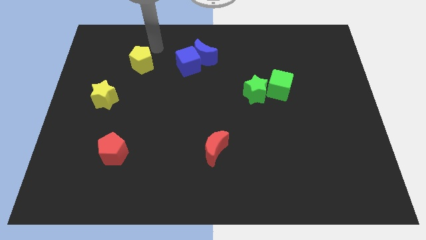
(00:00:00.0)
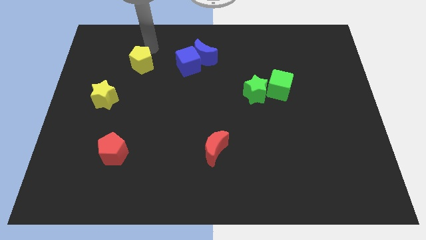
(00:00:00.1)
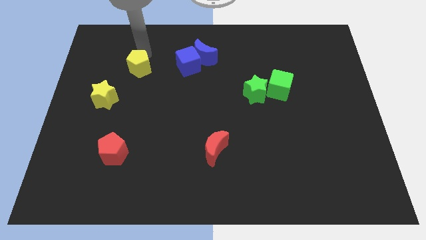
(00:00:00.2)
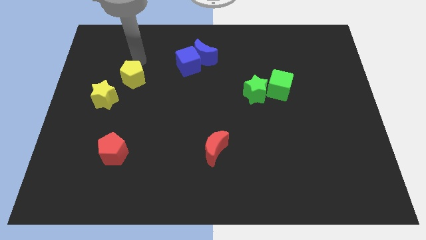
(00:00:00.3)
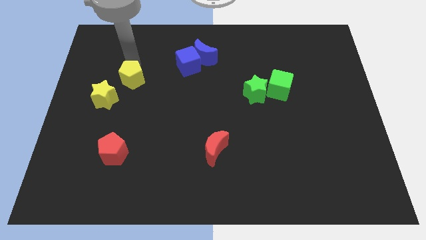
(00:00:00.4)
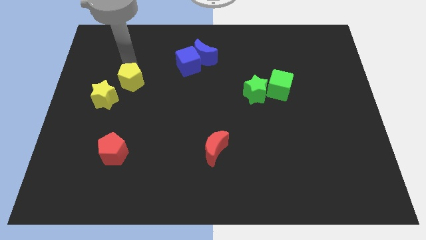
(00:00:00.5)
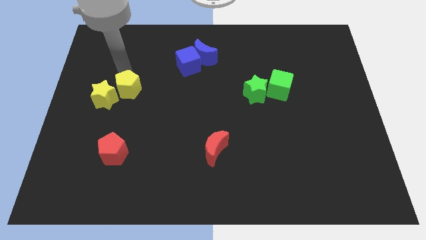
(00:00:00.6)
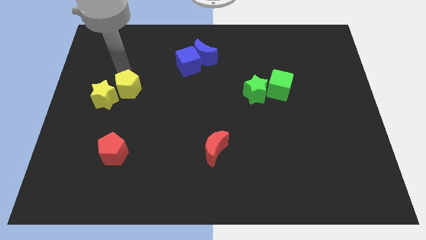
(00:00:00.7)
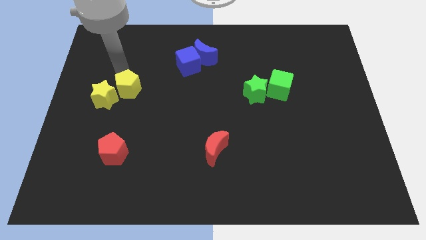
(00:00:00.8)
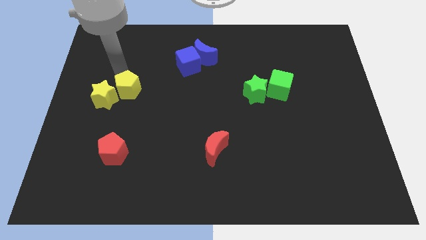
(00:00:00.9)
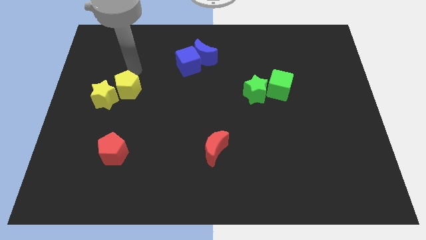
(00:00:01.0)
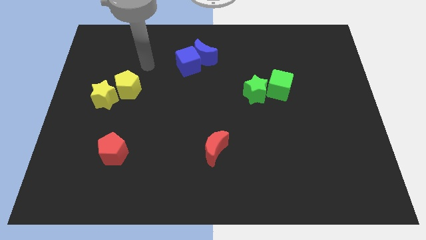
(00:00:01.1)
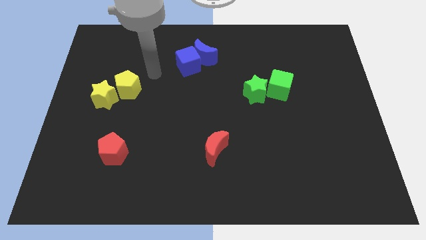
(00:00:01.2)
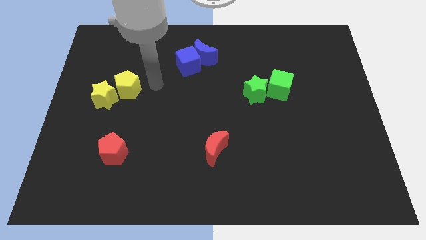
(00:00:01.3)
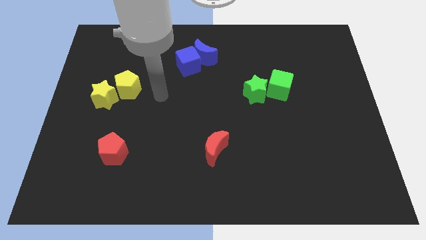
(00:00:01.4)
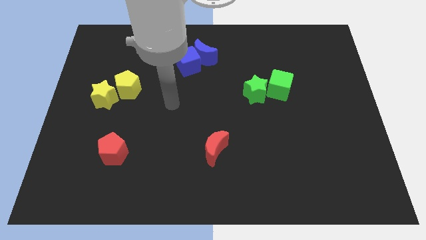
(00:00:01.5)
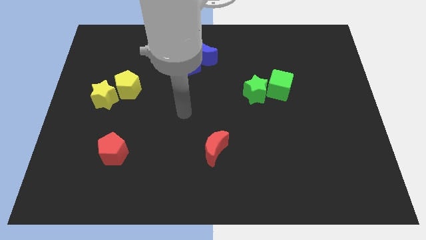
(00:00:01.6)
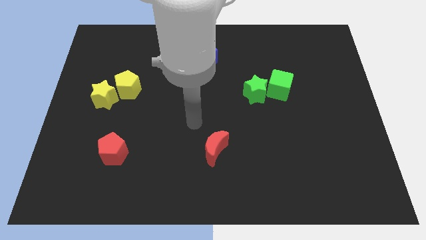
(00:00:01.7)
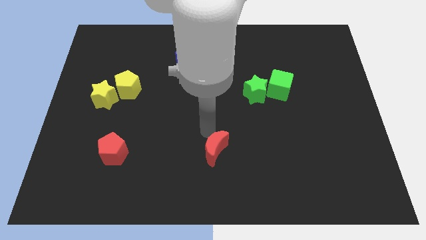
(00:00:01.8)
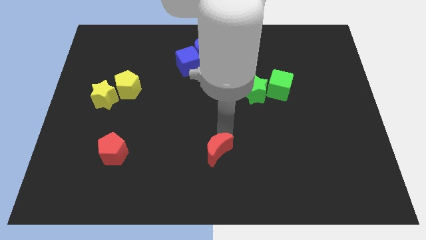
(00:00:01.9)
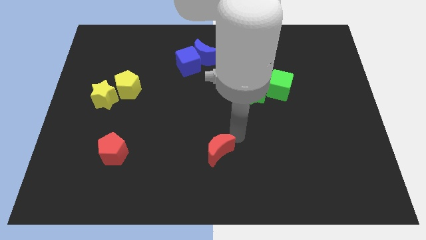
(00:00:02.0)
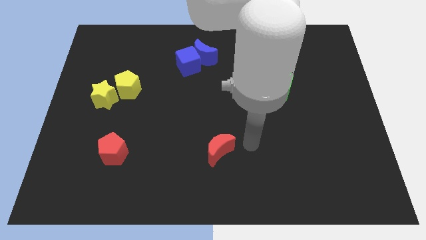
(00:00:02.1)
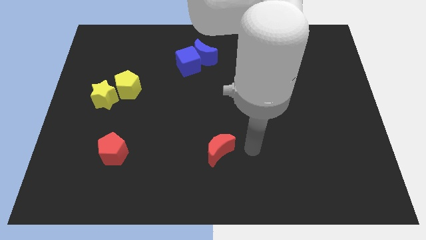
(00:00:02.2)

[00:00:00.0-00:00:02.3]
move yellow pentagon close to the yellow star

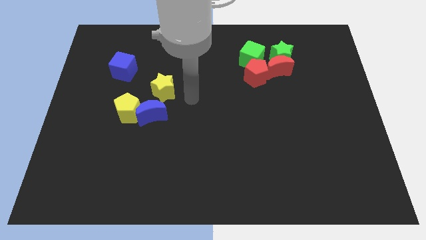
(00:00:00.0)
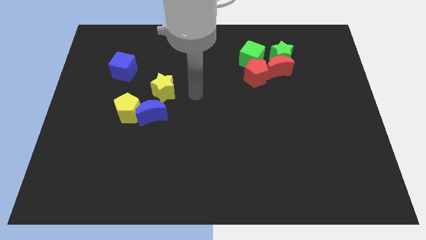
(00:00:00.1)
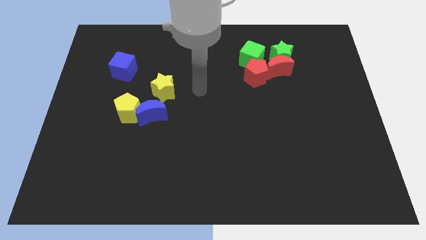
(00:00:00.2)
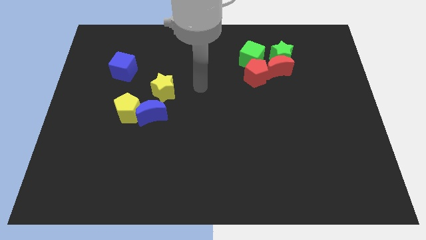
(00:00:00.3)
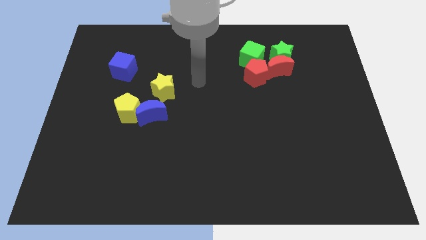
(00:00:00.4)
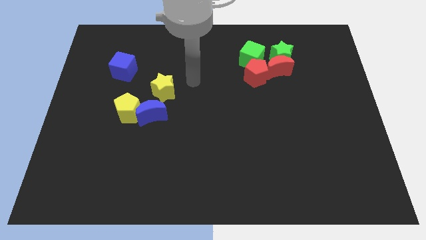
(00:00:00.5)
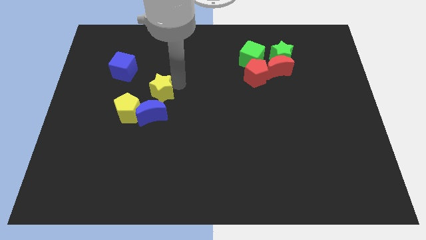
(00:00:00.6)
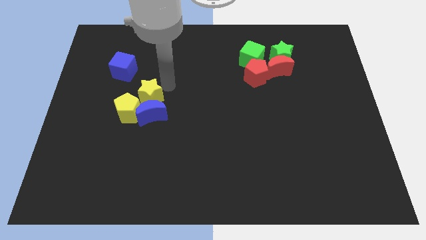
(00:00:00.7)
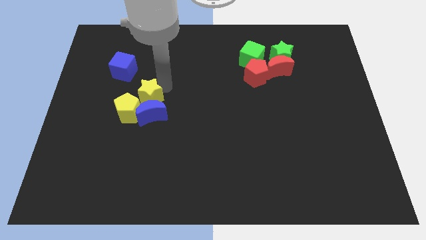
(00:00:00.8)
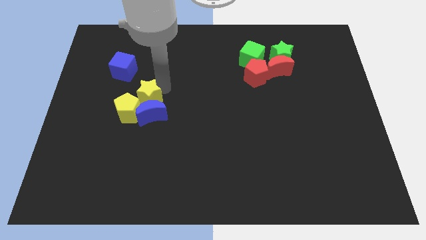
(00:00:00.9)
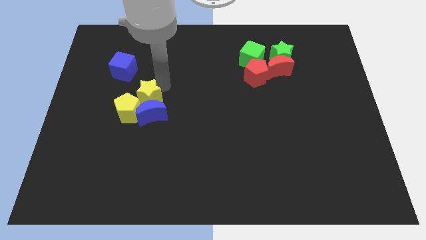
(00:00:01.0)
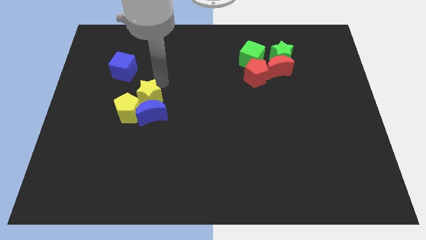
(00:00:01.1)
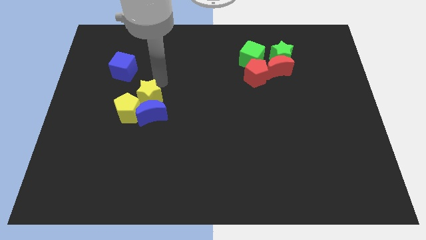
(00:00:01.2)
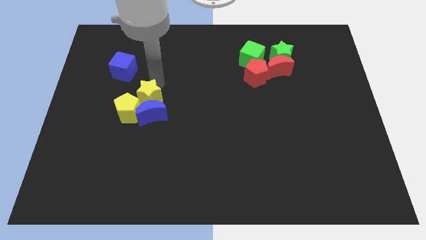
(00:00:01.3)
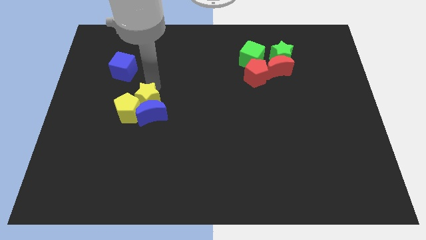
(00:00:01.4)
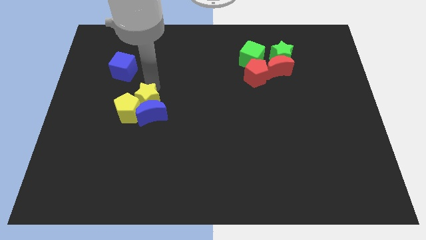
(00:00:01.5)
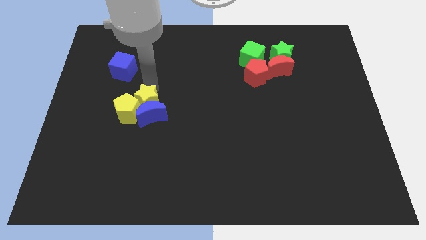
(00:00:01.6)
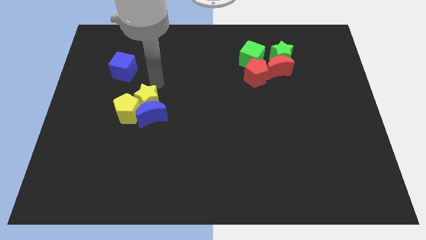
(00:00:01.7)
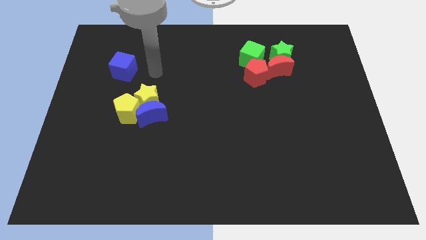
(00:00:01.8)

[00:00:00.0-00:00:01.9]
push the yellow star into the yellow pentagon and blue crescent

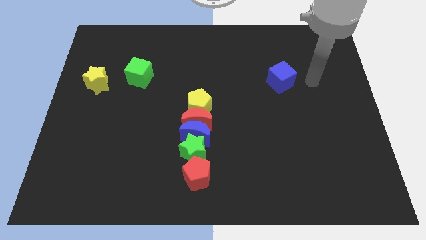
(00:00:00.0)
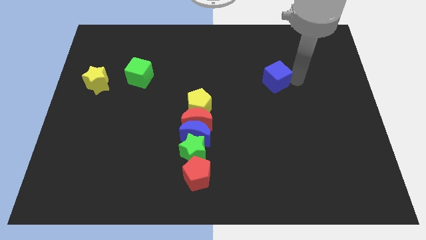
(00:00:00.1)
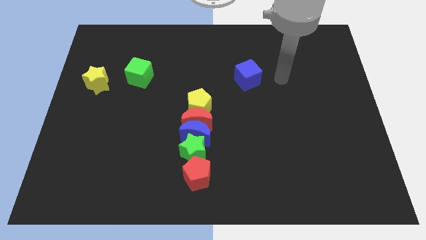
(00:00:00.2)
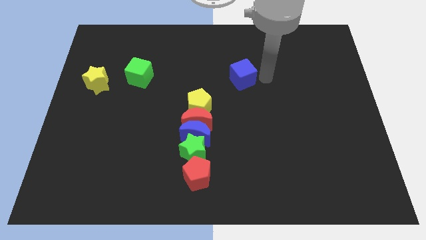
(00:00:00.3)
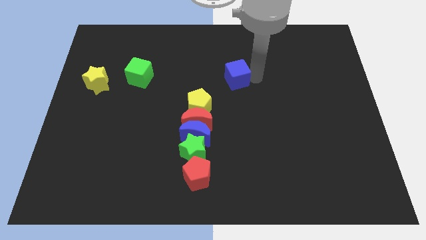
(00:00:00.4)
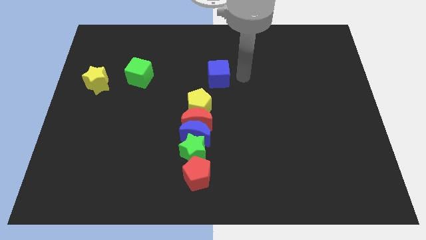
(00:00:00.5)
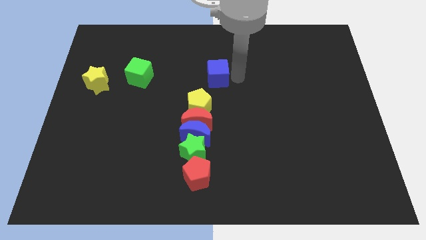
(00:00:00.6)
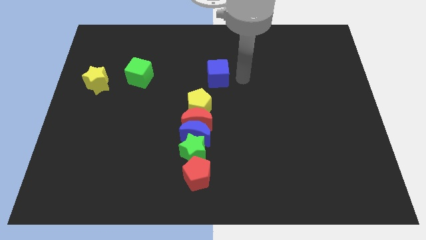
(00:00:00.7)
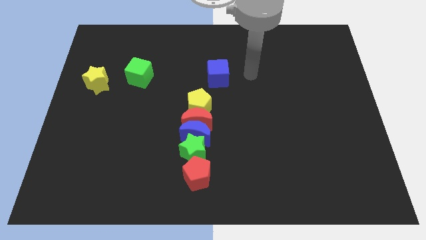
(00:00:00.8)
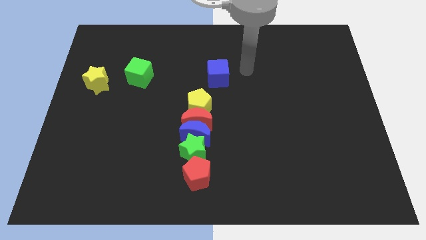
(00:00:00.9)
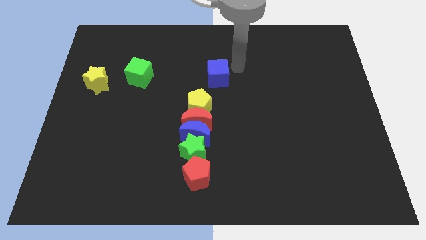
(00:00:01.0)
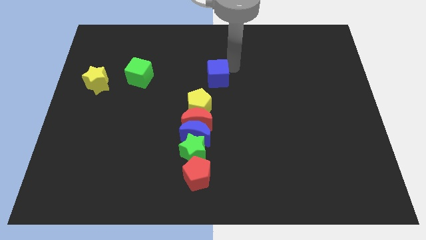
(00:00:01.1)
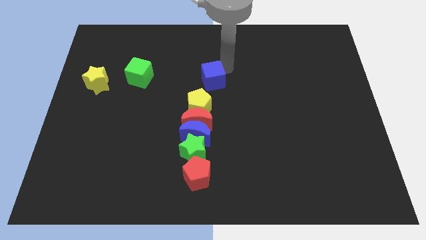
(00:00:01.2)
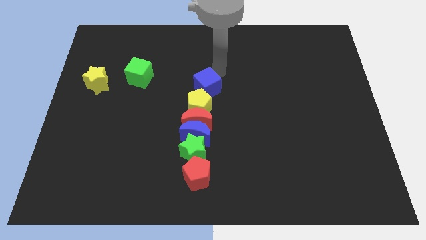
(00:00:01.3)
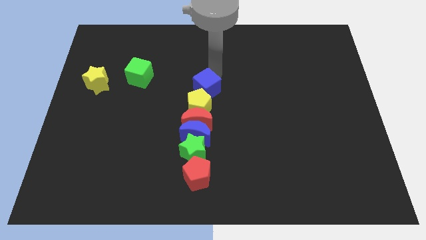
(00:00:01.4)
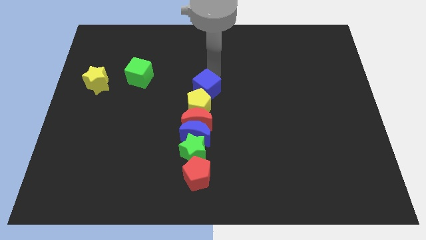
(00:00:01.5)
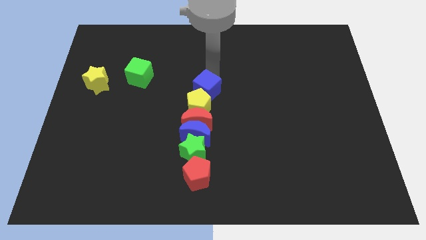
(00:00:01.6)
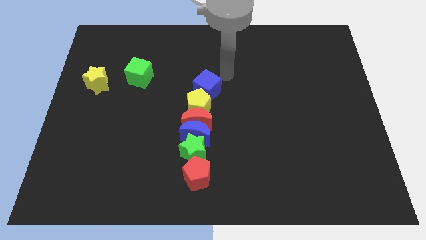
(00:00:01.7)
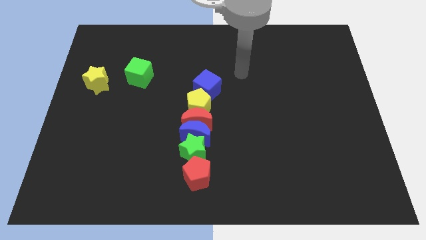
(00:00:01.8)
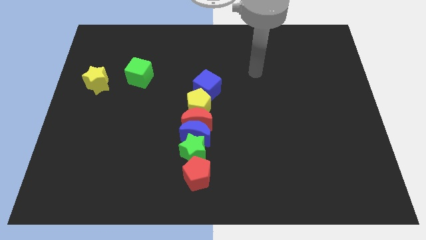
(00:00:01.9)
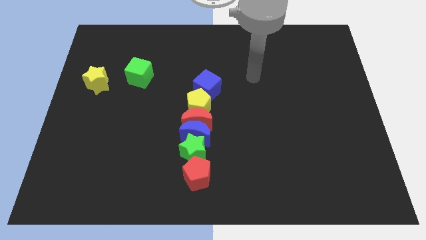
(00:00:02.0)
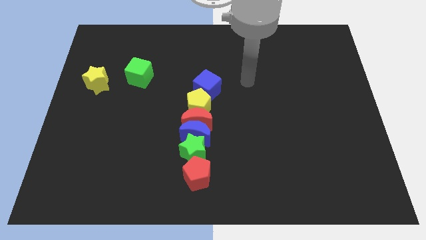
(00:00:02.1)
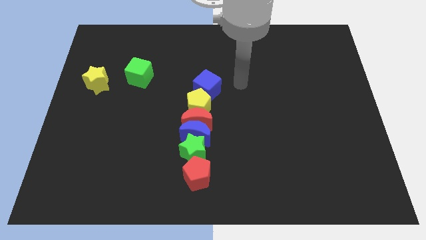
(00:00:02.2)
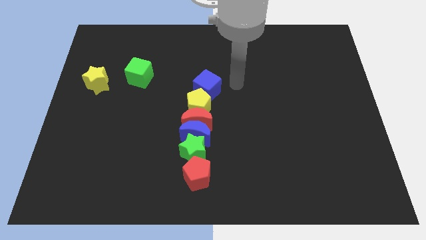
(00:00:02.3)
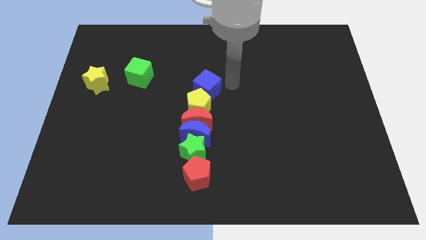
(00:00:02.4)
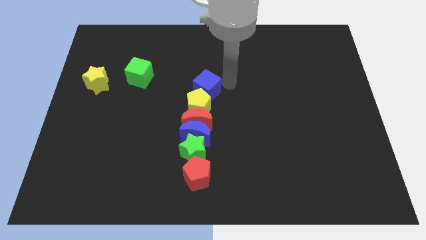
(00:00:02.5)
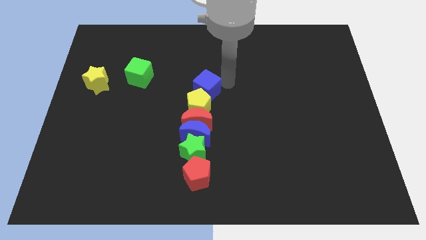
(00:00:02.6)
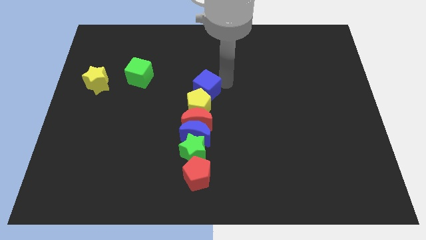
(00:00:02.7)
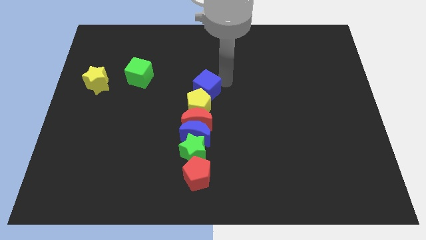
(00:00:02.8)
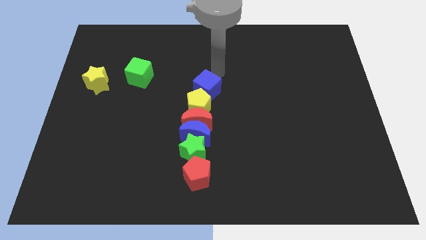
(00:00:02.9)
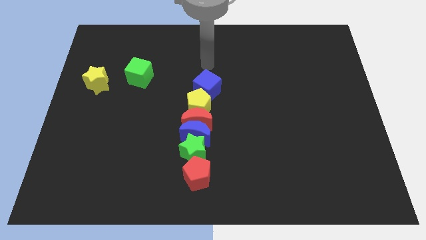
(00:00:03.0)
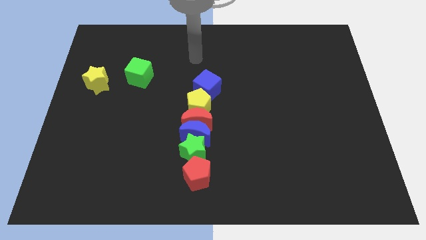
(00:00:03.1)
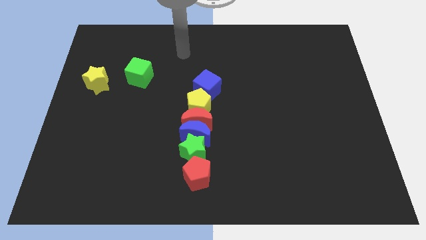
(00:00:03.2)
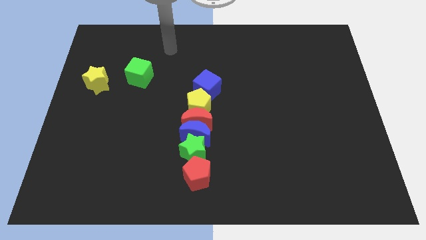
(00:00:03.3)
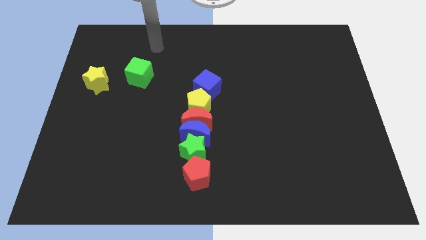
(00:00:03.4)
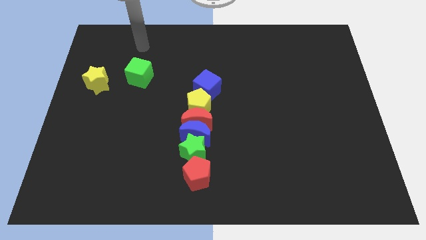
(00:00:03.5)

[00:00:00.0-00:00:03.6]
slide the blue cube vertically above the yellow pentagon

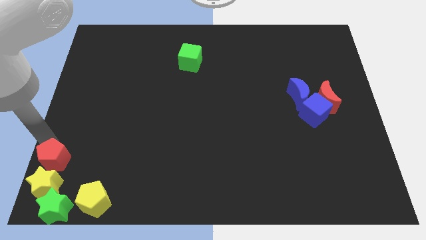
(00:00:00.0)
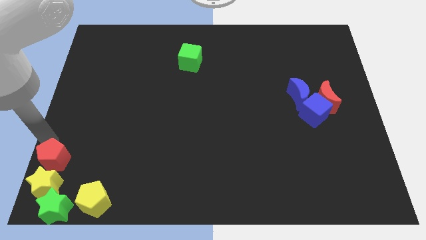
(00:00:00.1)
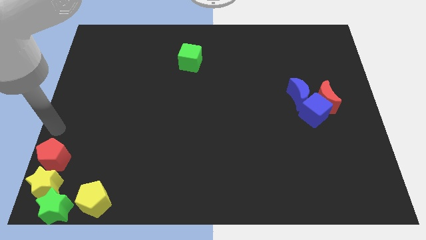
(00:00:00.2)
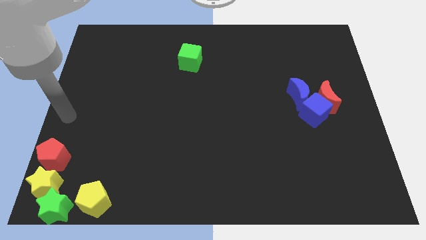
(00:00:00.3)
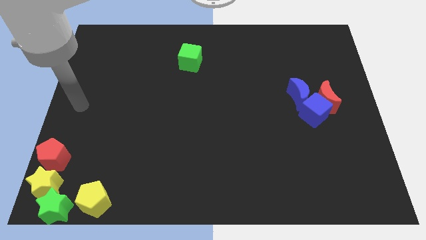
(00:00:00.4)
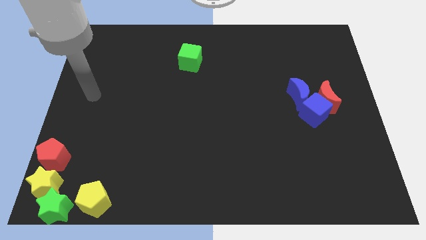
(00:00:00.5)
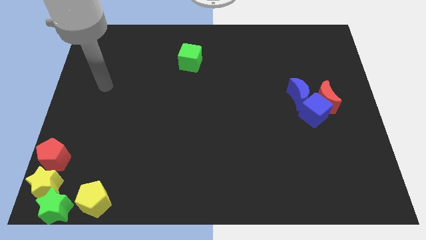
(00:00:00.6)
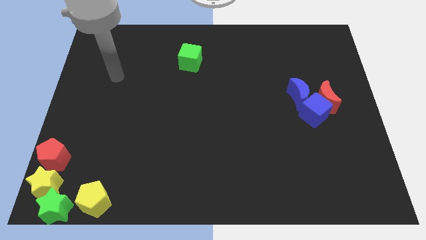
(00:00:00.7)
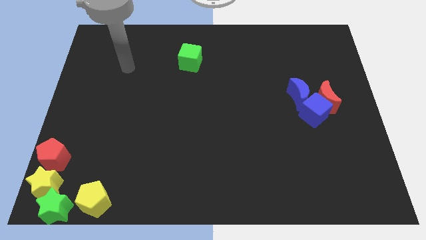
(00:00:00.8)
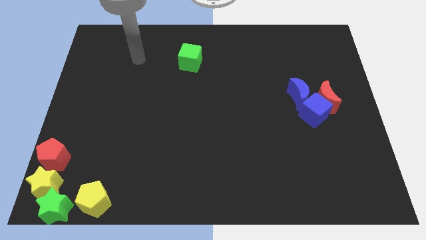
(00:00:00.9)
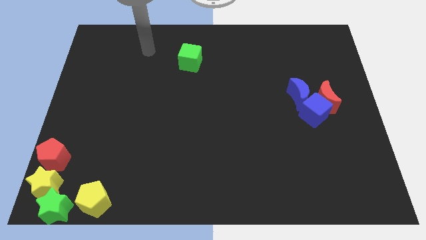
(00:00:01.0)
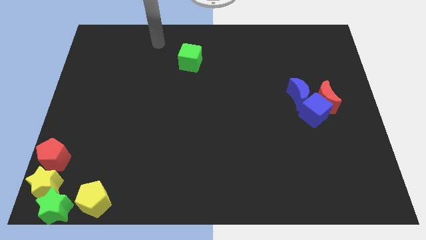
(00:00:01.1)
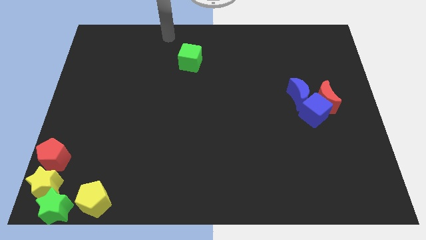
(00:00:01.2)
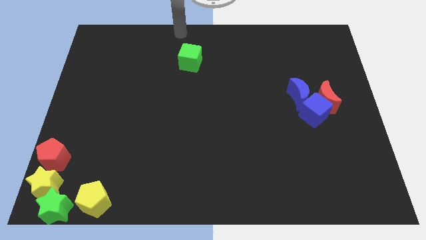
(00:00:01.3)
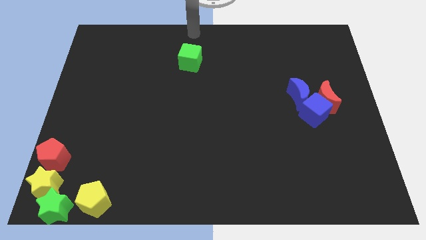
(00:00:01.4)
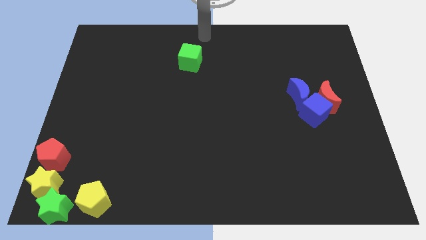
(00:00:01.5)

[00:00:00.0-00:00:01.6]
point your arm on top of the green star
